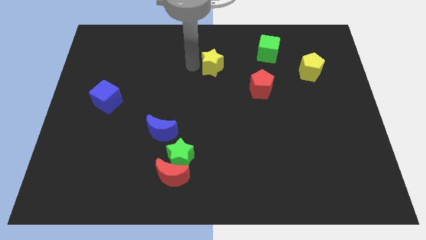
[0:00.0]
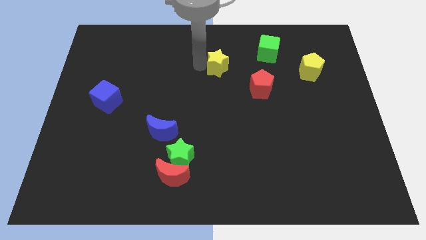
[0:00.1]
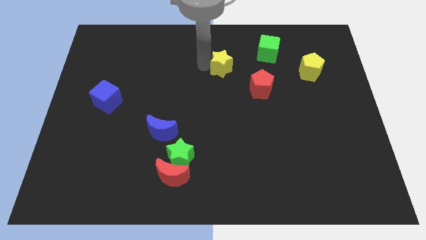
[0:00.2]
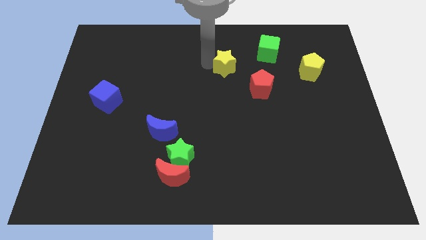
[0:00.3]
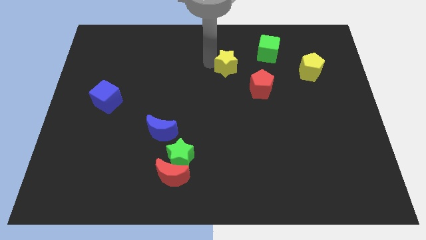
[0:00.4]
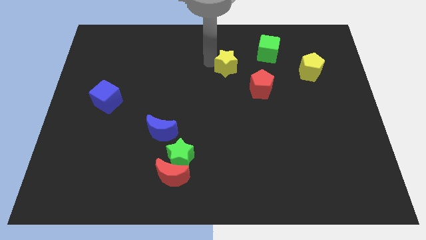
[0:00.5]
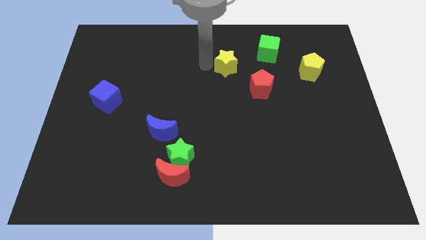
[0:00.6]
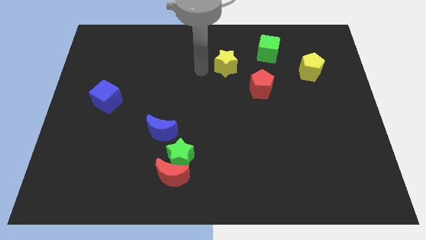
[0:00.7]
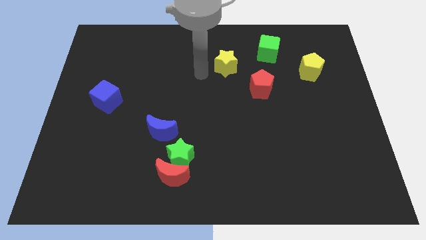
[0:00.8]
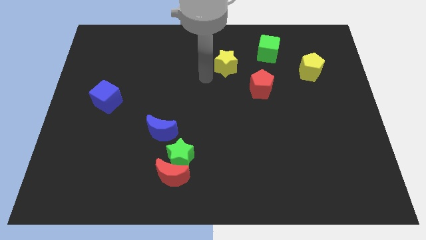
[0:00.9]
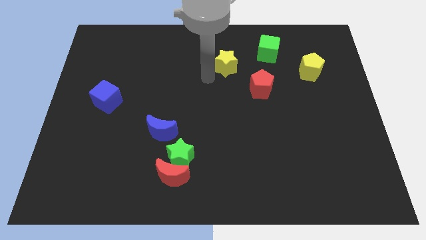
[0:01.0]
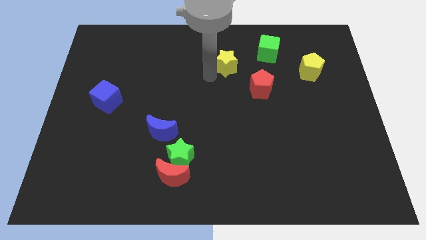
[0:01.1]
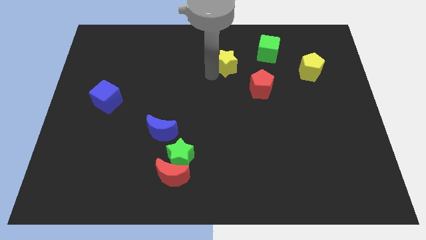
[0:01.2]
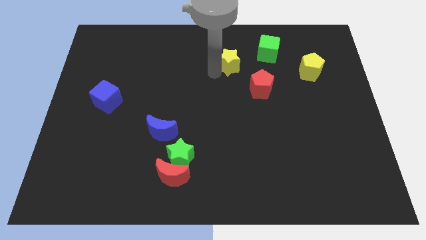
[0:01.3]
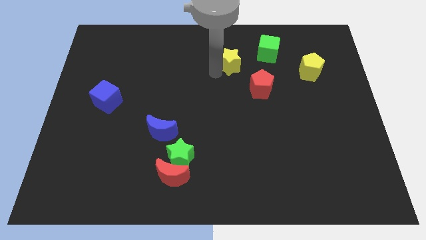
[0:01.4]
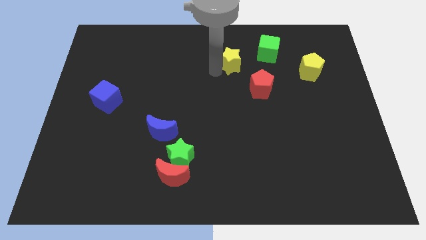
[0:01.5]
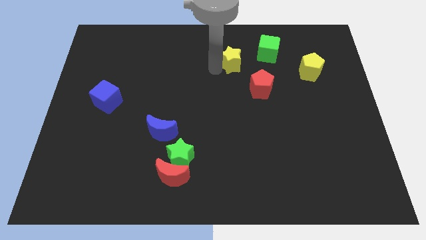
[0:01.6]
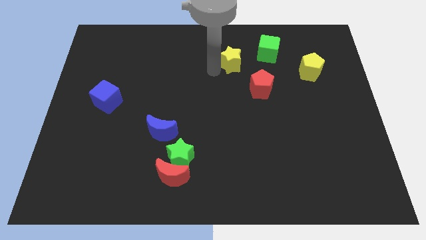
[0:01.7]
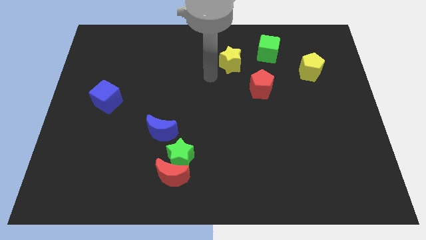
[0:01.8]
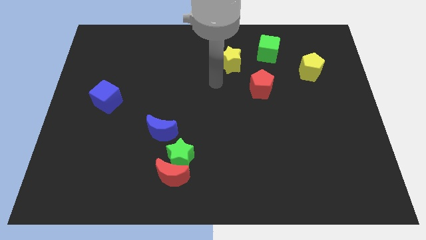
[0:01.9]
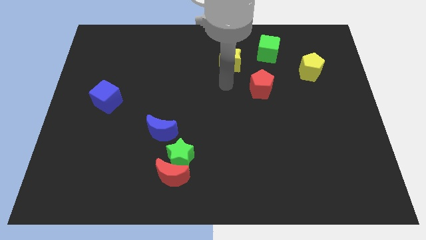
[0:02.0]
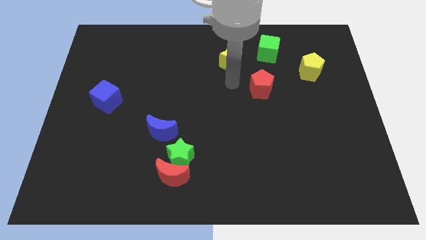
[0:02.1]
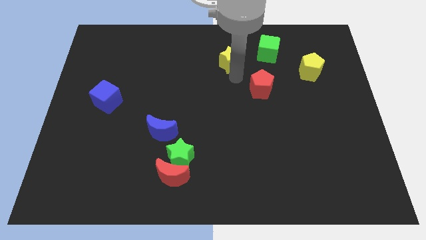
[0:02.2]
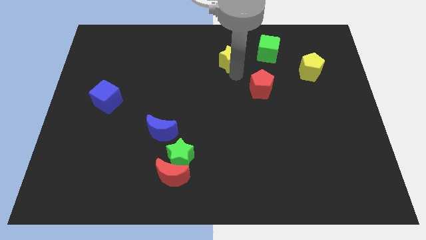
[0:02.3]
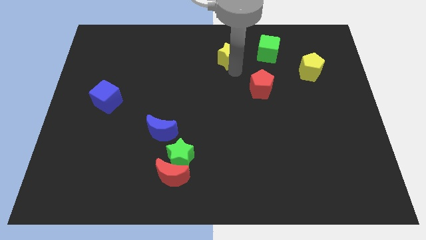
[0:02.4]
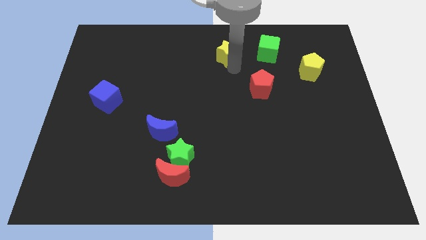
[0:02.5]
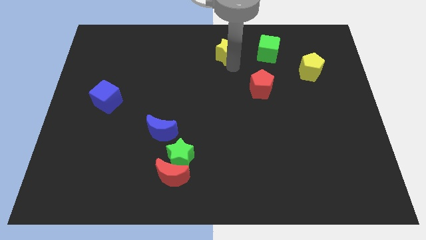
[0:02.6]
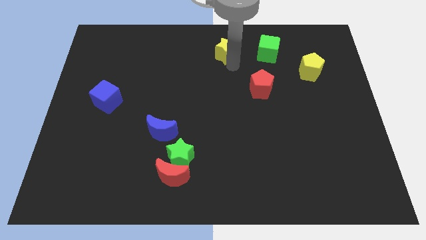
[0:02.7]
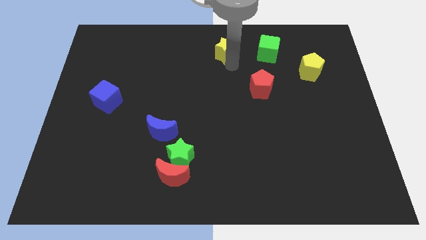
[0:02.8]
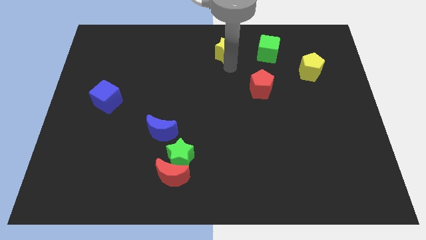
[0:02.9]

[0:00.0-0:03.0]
push the yellow star to the parallel left of the green cube

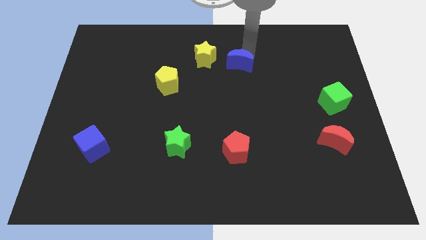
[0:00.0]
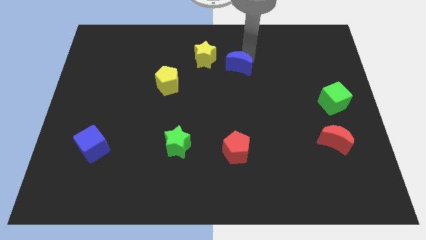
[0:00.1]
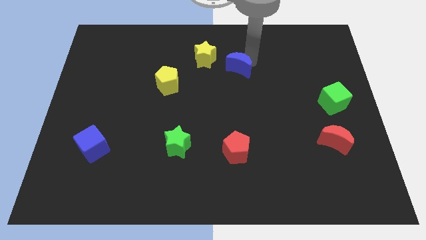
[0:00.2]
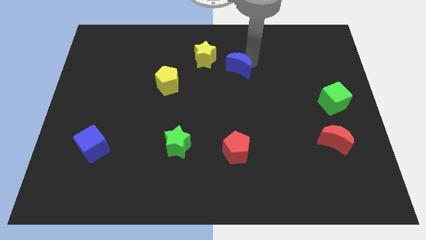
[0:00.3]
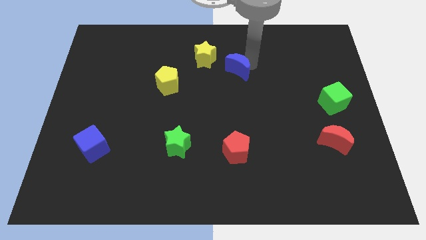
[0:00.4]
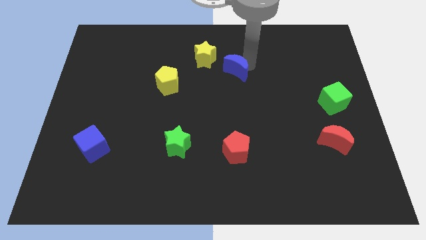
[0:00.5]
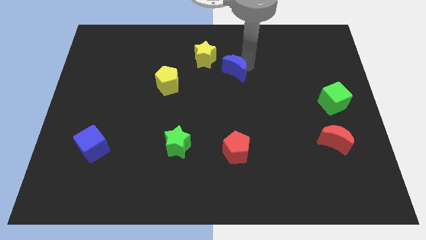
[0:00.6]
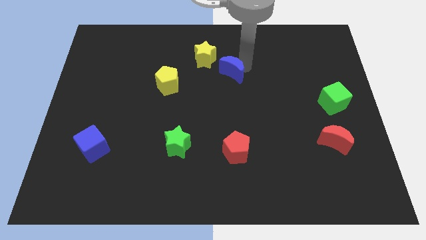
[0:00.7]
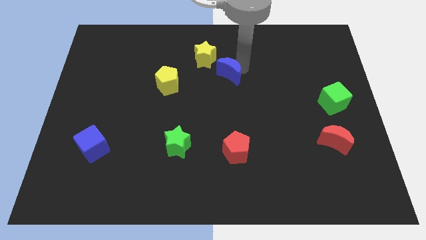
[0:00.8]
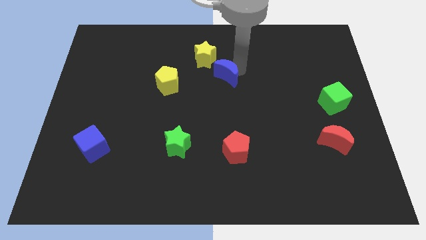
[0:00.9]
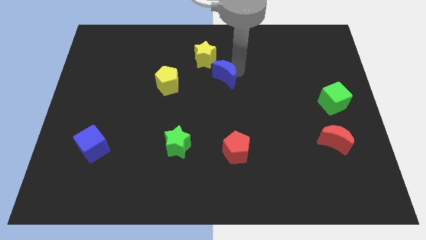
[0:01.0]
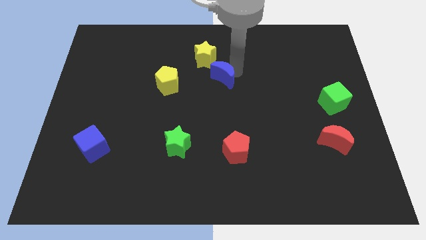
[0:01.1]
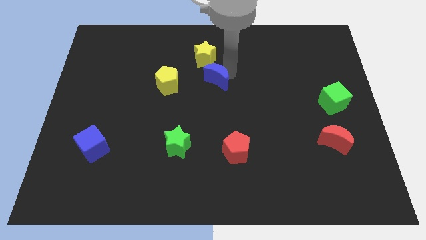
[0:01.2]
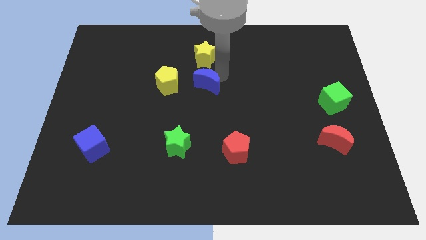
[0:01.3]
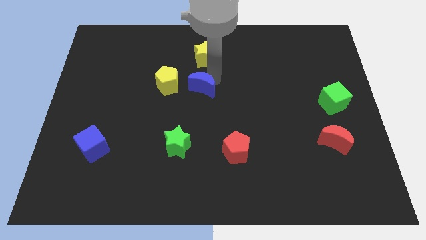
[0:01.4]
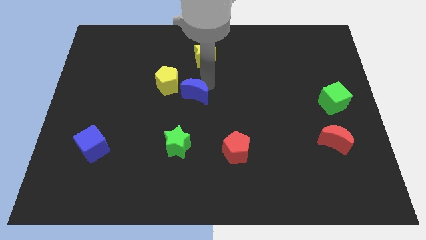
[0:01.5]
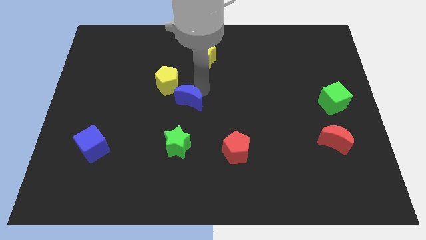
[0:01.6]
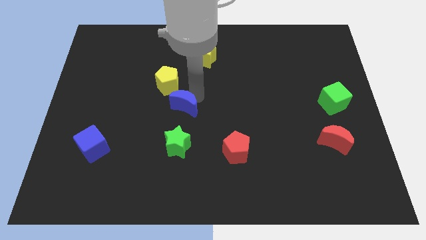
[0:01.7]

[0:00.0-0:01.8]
push the blue crescent towards the left center of the board

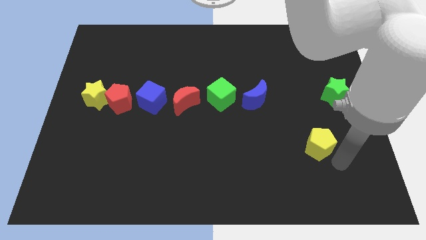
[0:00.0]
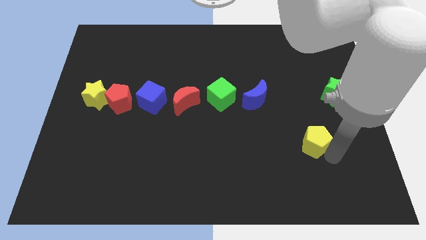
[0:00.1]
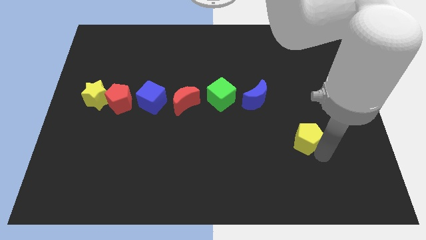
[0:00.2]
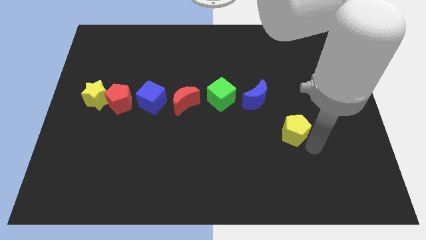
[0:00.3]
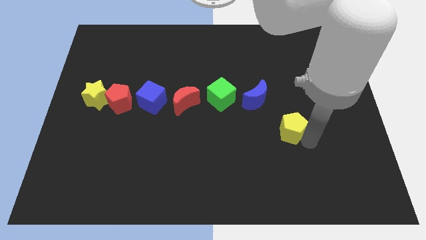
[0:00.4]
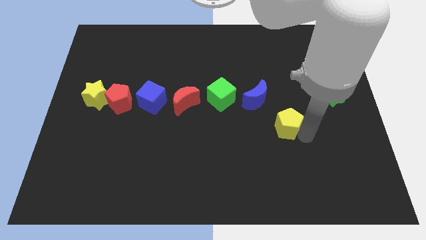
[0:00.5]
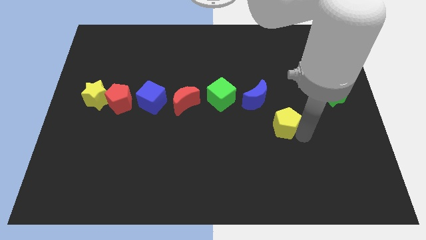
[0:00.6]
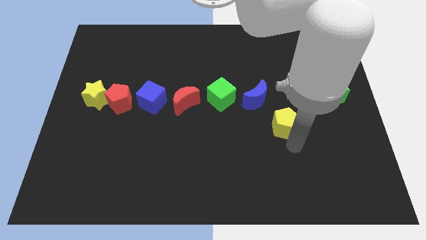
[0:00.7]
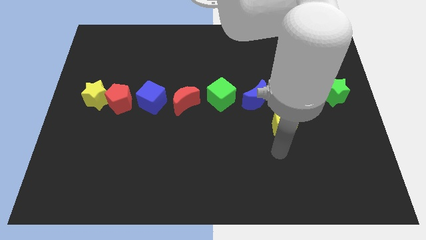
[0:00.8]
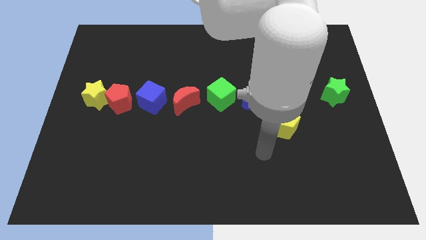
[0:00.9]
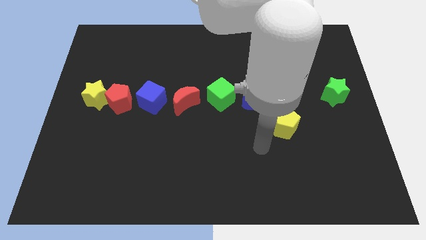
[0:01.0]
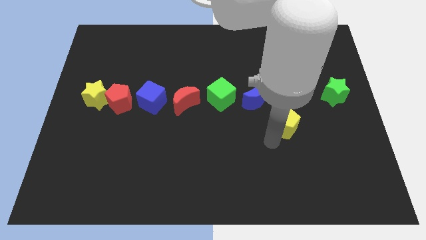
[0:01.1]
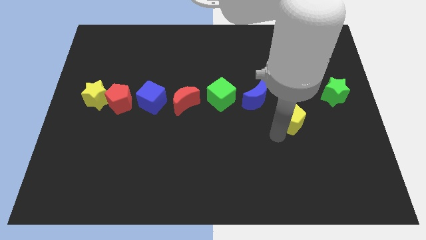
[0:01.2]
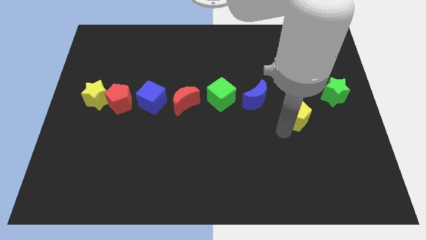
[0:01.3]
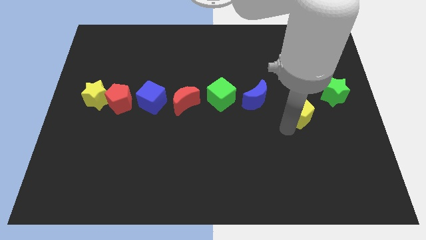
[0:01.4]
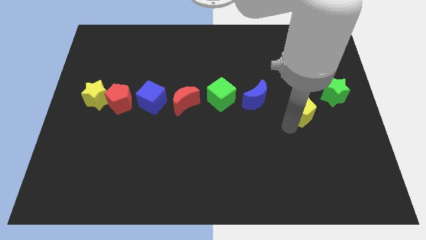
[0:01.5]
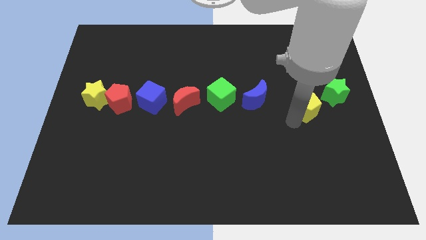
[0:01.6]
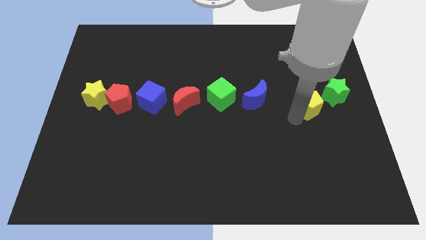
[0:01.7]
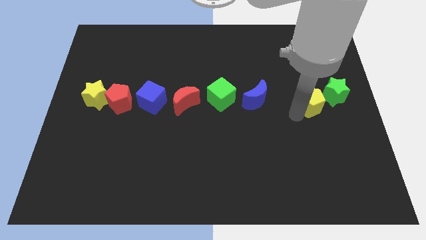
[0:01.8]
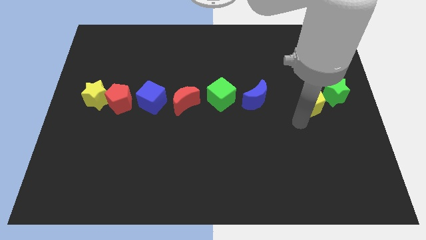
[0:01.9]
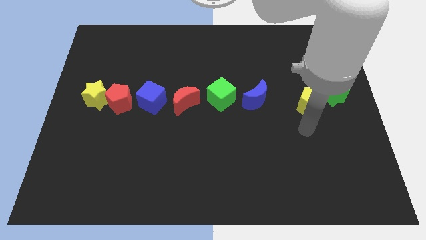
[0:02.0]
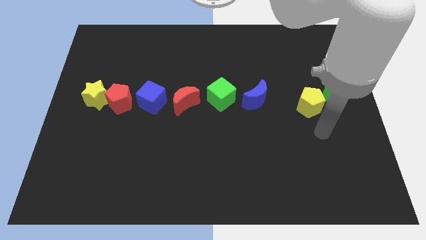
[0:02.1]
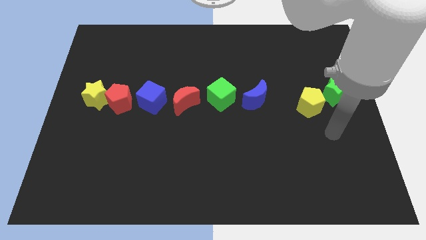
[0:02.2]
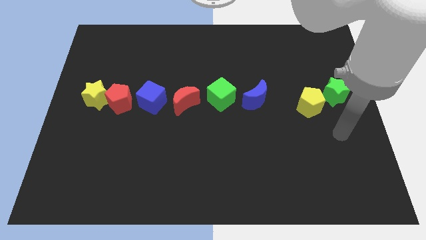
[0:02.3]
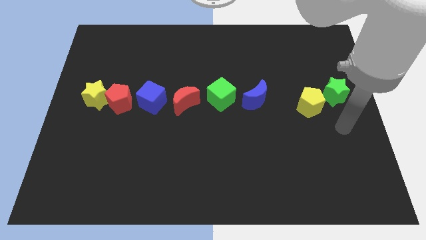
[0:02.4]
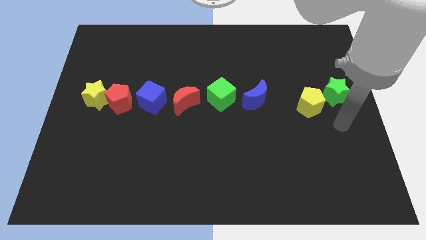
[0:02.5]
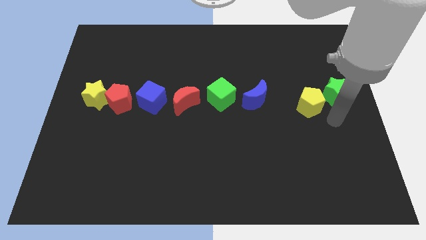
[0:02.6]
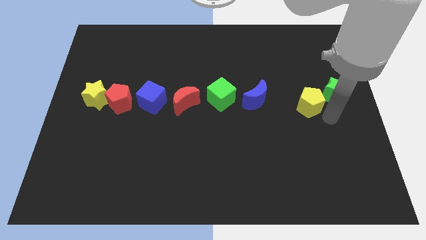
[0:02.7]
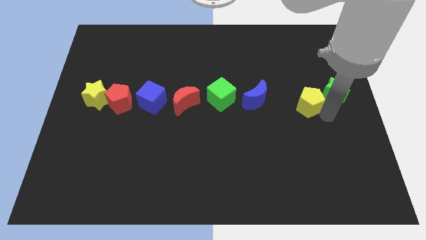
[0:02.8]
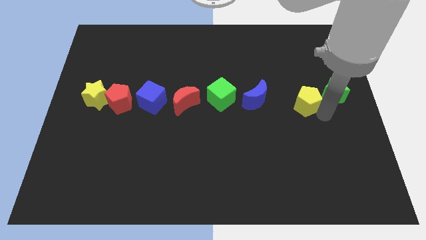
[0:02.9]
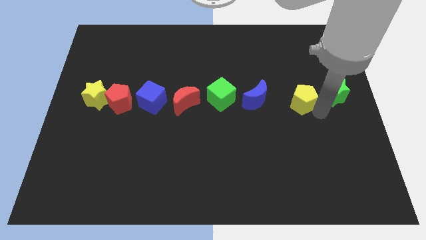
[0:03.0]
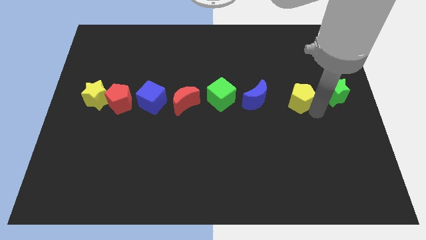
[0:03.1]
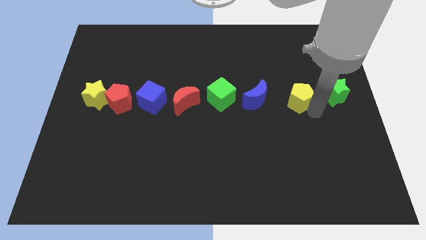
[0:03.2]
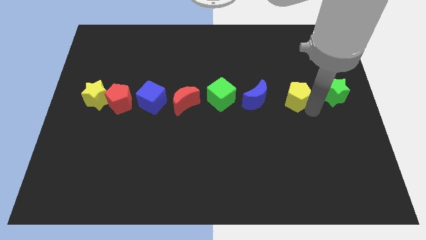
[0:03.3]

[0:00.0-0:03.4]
place the yellow pentagon in between green star and blue cube

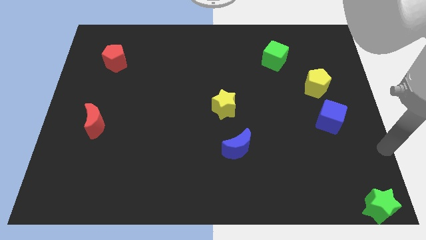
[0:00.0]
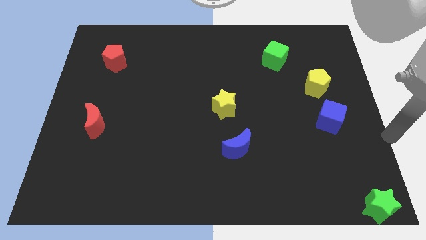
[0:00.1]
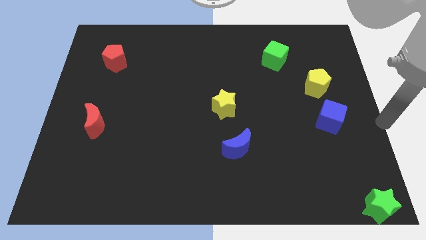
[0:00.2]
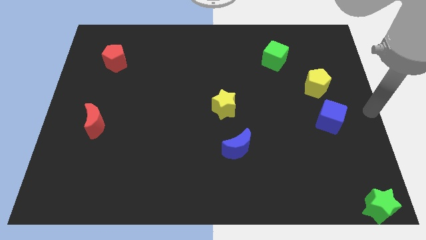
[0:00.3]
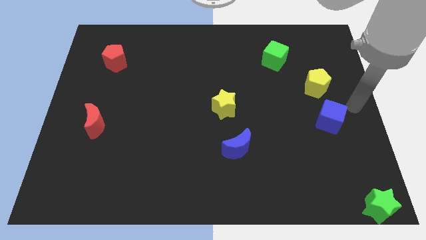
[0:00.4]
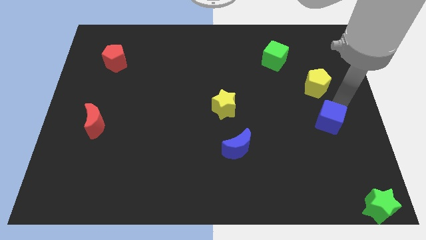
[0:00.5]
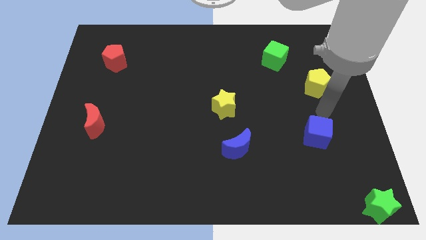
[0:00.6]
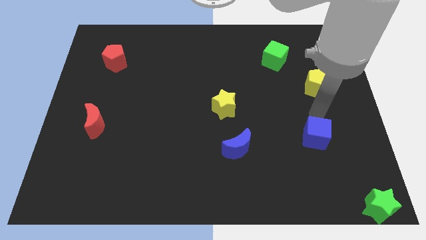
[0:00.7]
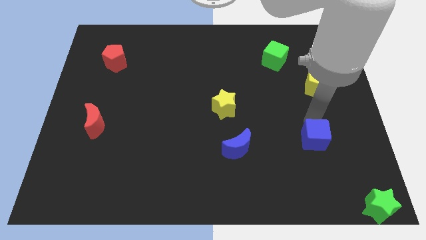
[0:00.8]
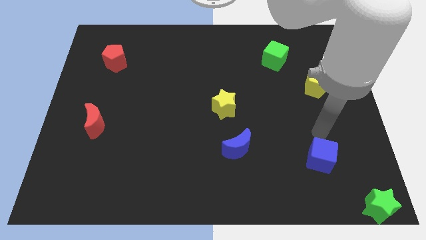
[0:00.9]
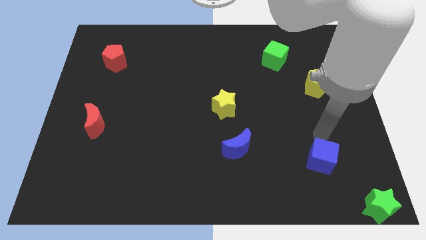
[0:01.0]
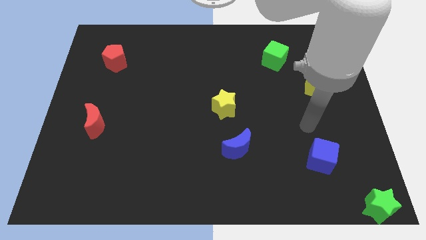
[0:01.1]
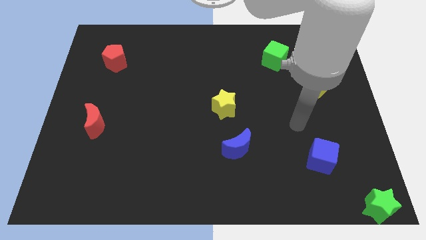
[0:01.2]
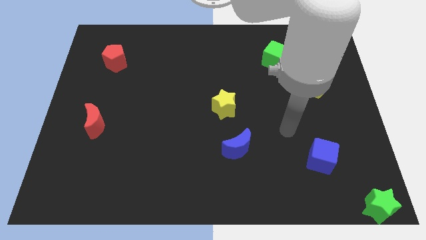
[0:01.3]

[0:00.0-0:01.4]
push the blue cube slightly to the bottom
